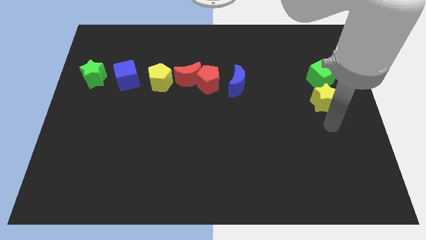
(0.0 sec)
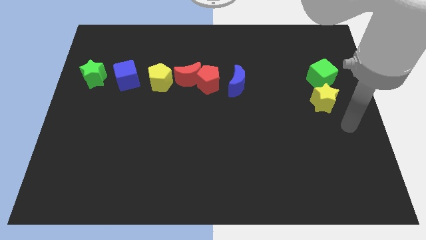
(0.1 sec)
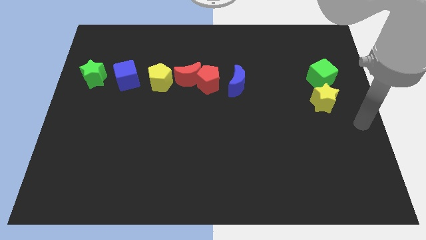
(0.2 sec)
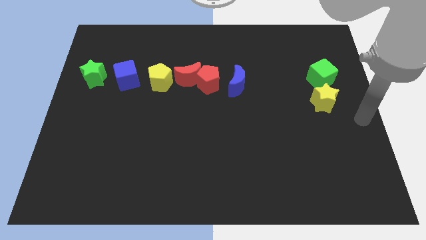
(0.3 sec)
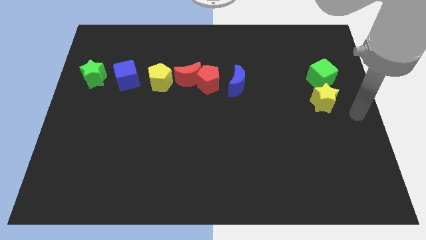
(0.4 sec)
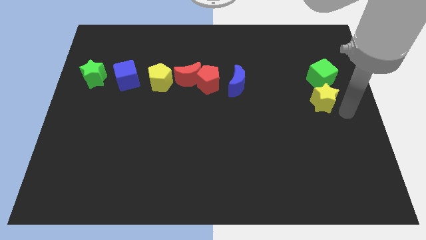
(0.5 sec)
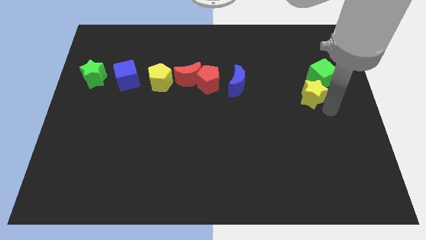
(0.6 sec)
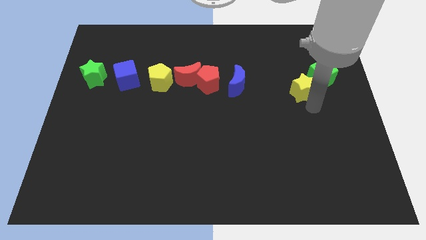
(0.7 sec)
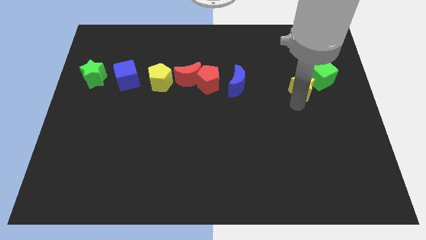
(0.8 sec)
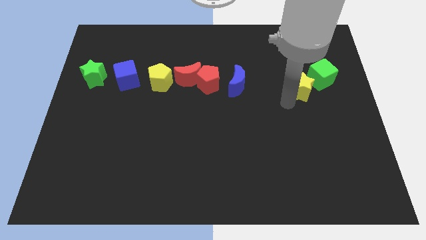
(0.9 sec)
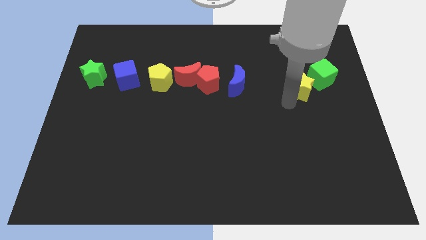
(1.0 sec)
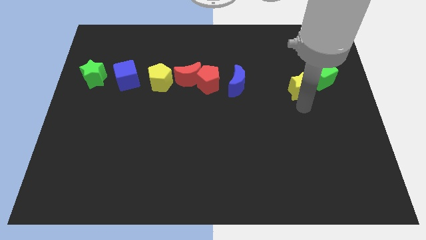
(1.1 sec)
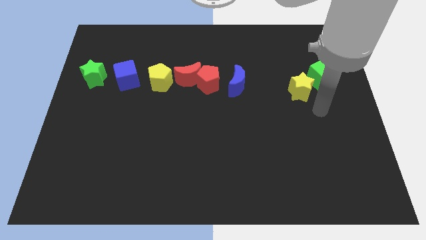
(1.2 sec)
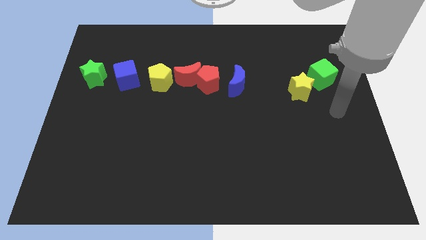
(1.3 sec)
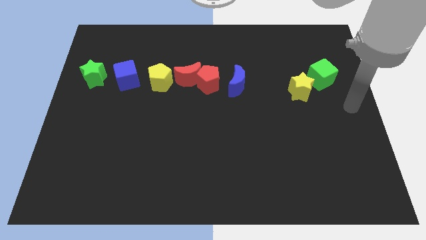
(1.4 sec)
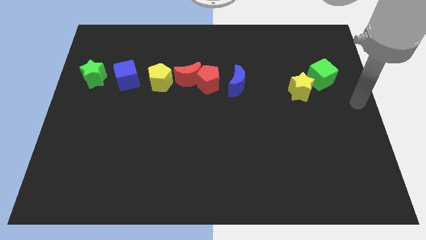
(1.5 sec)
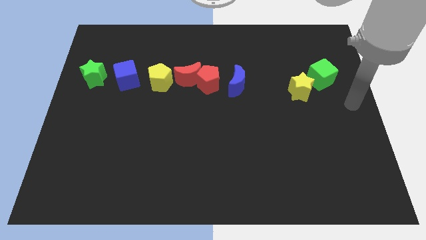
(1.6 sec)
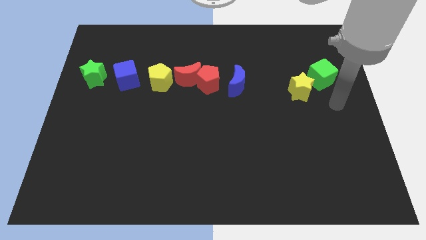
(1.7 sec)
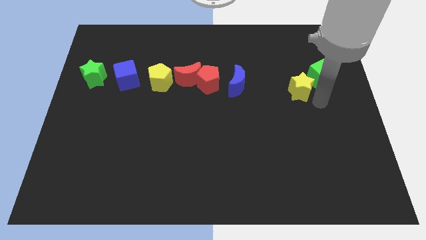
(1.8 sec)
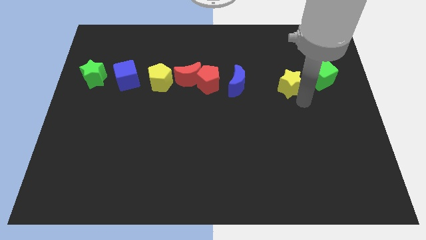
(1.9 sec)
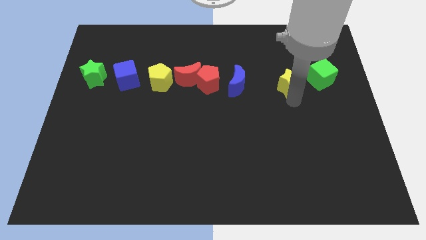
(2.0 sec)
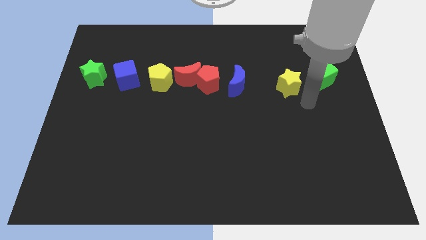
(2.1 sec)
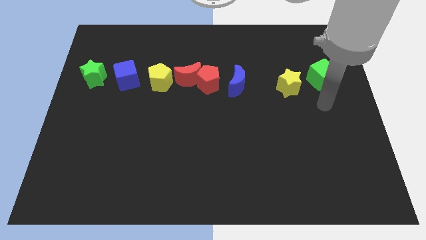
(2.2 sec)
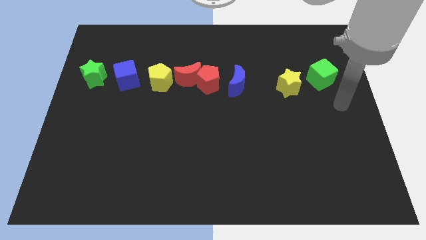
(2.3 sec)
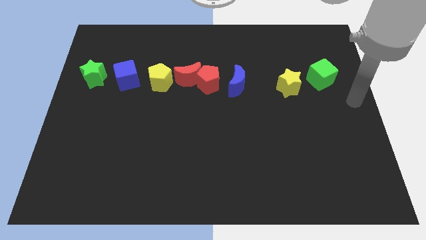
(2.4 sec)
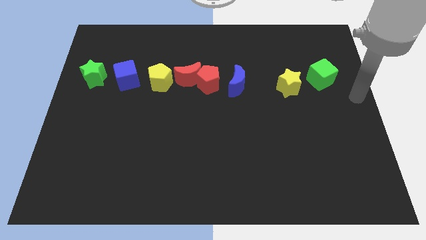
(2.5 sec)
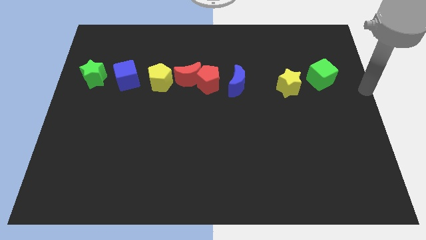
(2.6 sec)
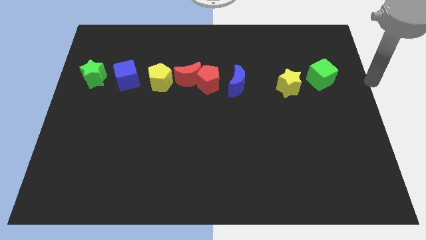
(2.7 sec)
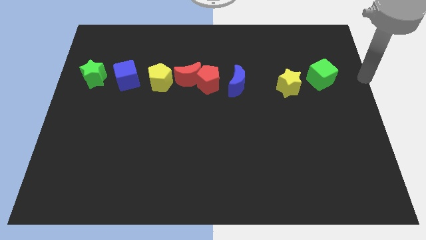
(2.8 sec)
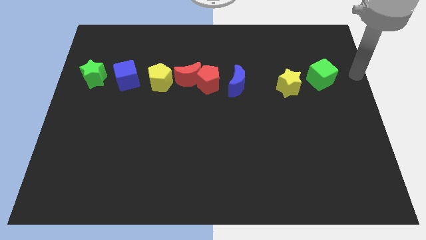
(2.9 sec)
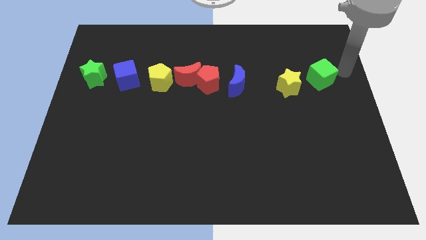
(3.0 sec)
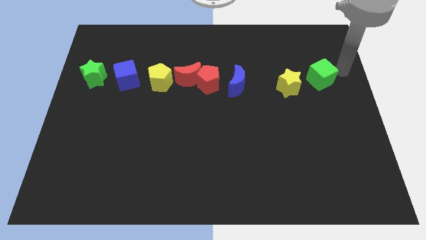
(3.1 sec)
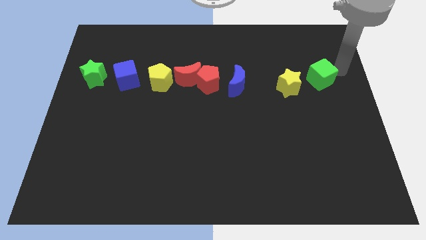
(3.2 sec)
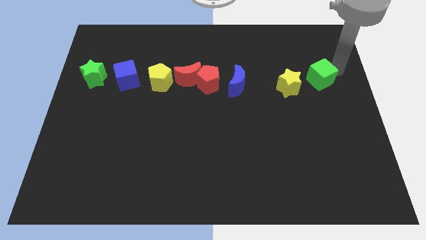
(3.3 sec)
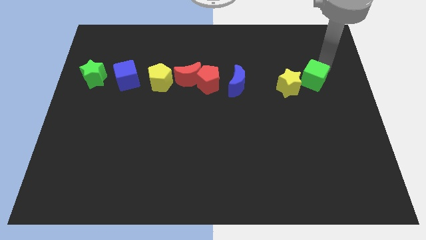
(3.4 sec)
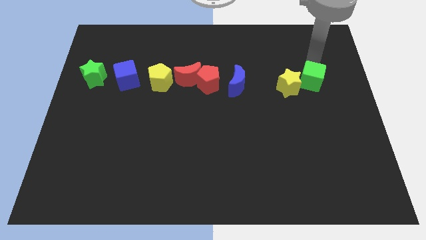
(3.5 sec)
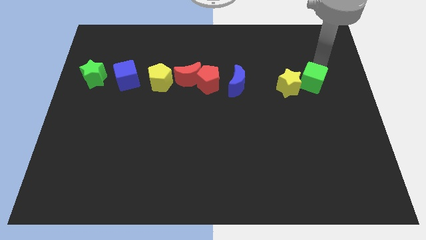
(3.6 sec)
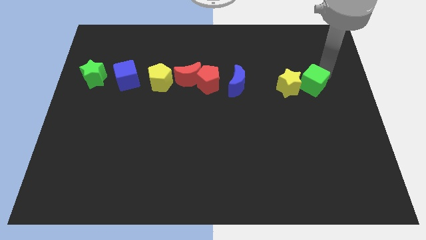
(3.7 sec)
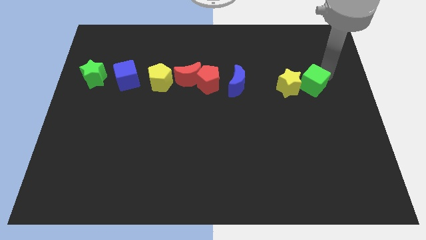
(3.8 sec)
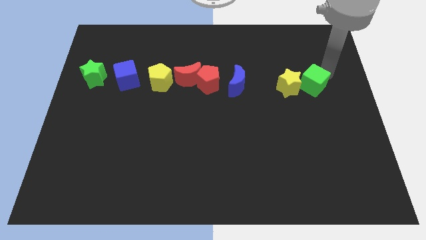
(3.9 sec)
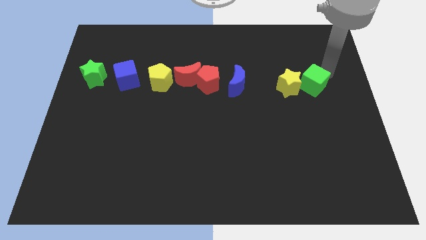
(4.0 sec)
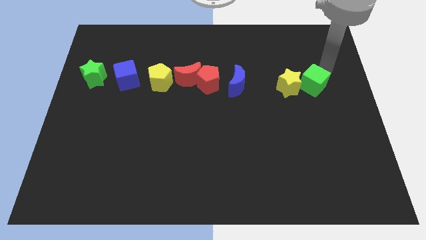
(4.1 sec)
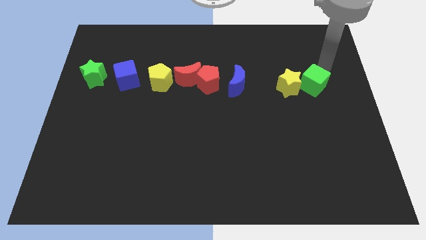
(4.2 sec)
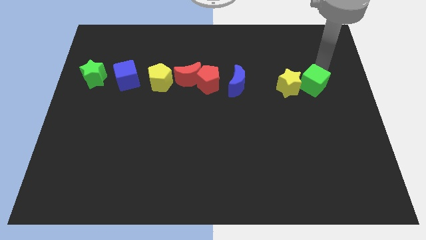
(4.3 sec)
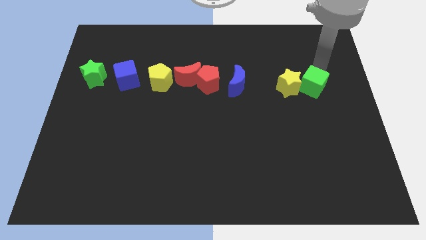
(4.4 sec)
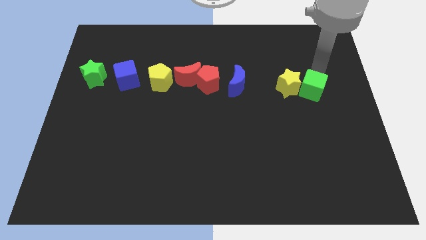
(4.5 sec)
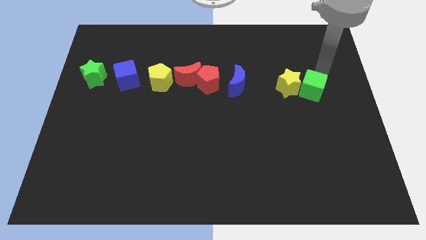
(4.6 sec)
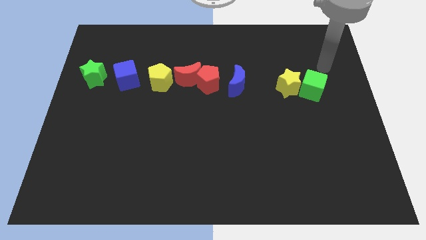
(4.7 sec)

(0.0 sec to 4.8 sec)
align yellow star with green cube

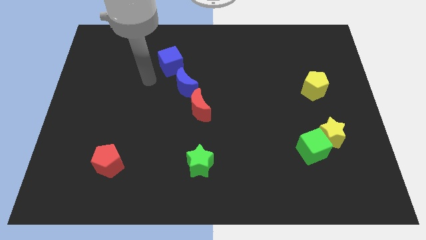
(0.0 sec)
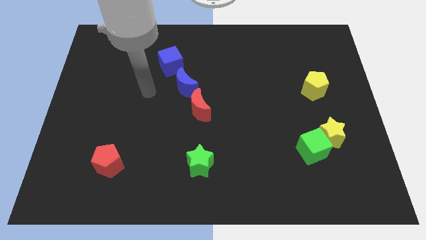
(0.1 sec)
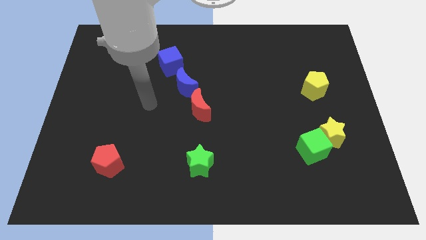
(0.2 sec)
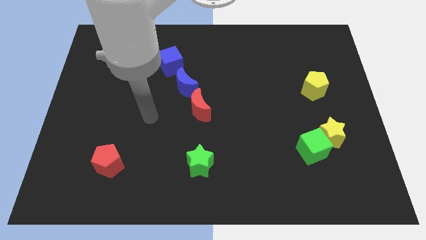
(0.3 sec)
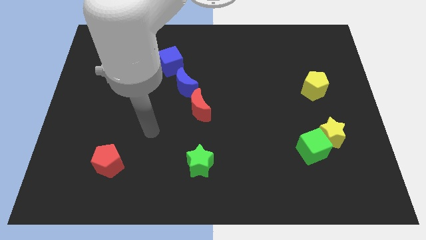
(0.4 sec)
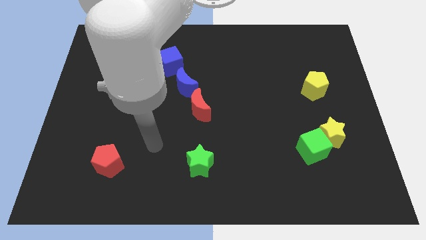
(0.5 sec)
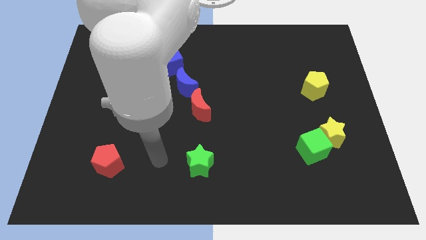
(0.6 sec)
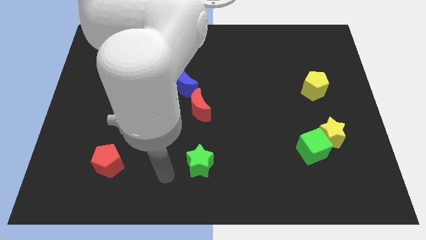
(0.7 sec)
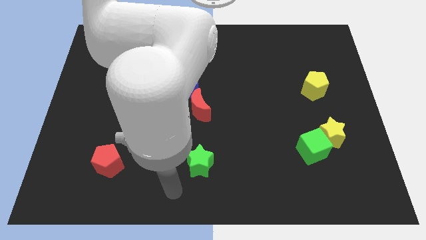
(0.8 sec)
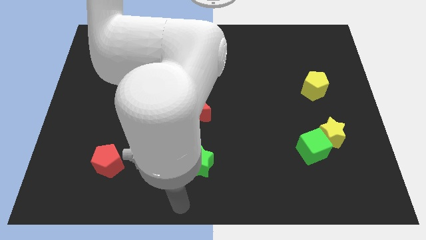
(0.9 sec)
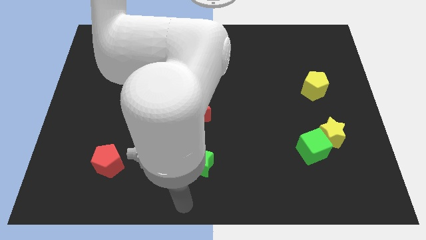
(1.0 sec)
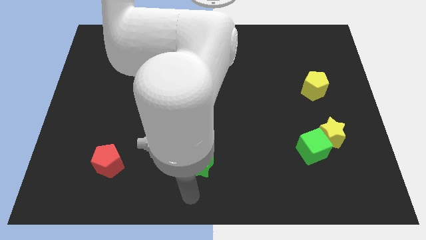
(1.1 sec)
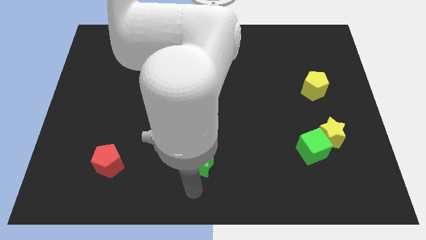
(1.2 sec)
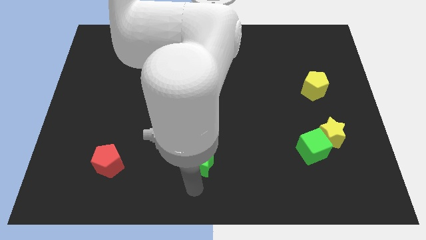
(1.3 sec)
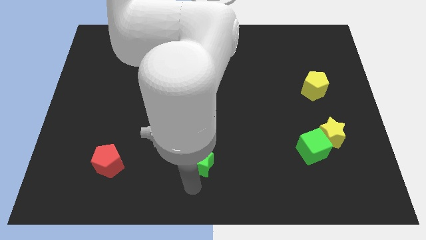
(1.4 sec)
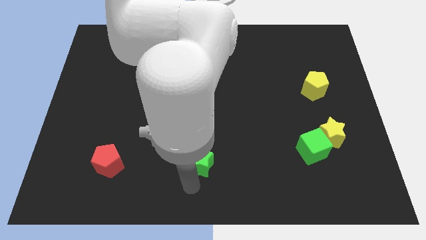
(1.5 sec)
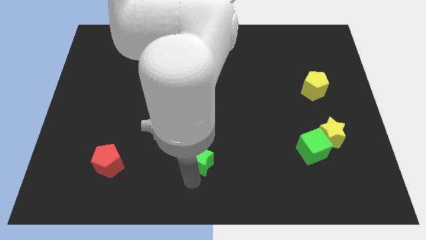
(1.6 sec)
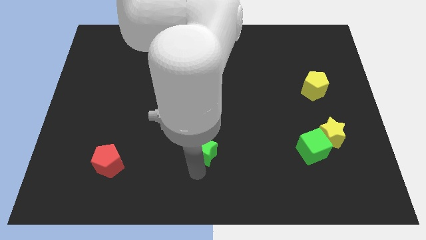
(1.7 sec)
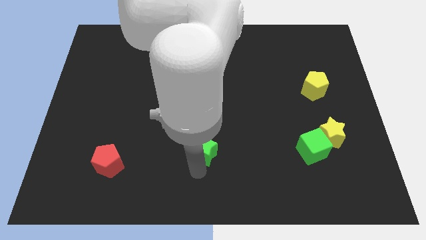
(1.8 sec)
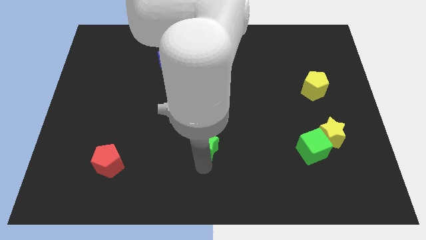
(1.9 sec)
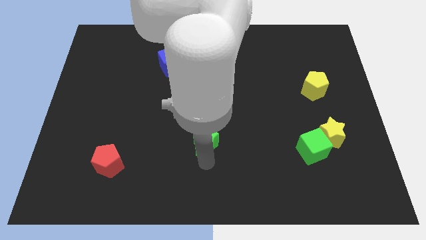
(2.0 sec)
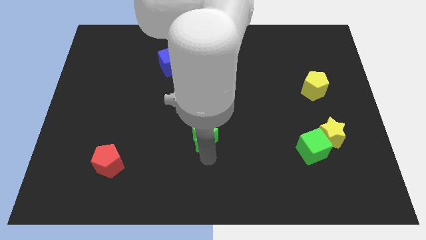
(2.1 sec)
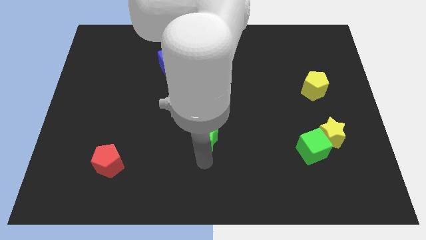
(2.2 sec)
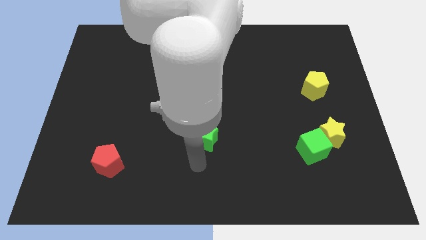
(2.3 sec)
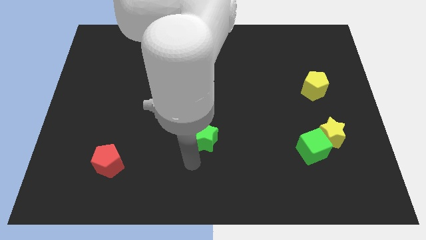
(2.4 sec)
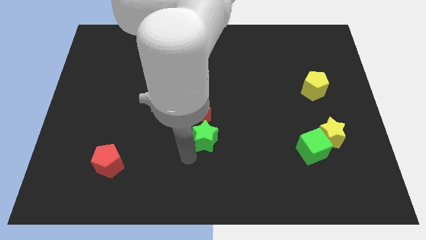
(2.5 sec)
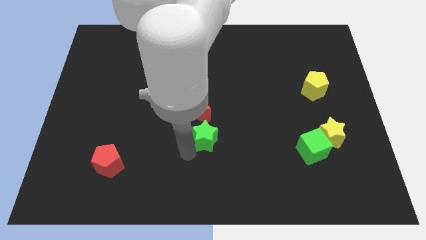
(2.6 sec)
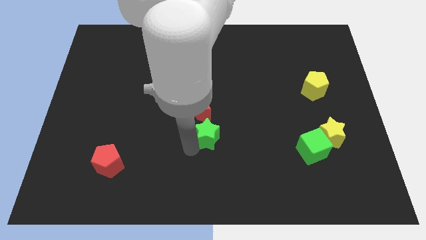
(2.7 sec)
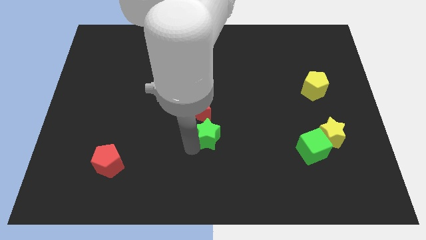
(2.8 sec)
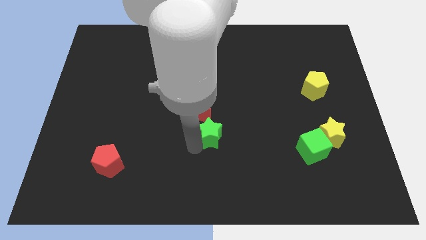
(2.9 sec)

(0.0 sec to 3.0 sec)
move the green star close to the bottom of the red crescent

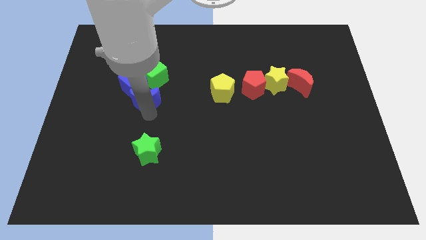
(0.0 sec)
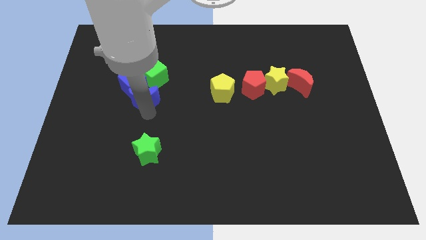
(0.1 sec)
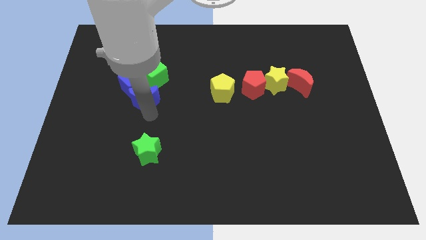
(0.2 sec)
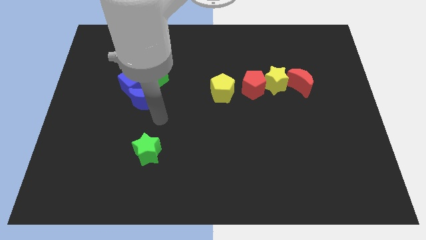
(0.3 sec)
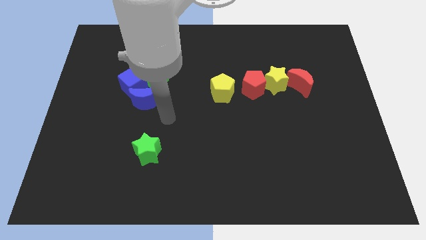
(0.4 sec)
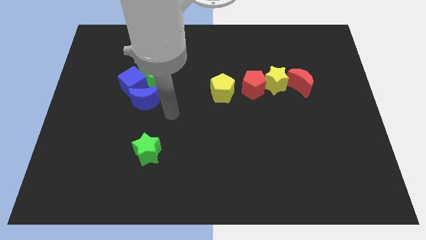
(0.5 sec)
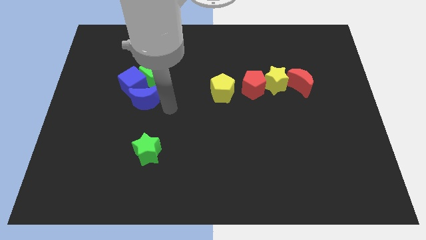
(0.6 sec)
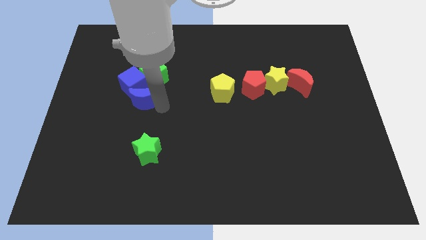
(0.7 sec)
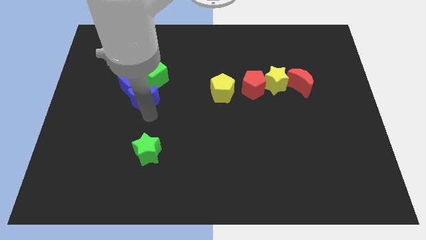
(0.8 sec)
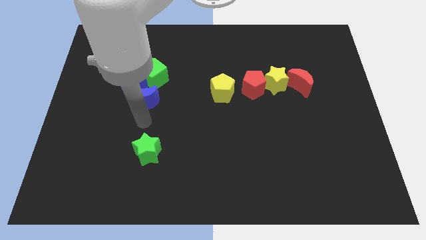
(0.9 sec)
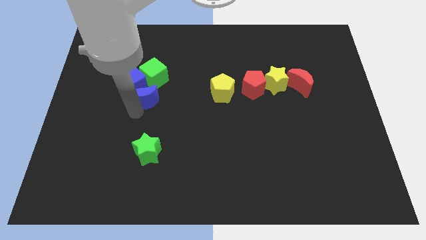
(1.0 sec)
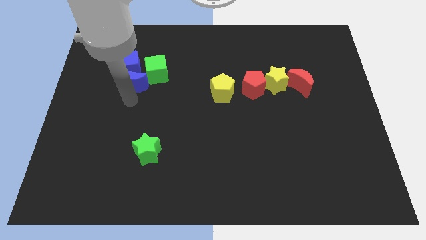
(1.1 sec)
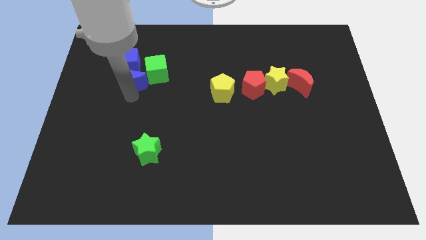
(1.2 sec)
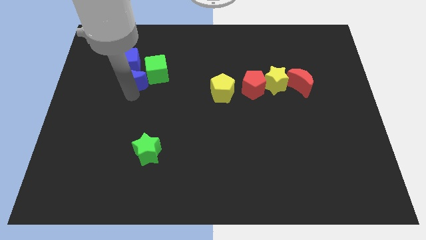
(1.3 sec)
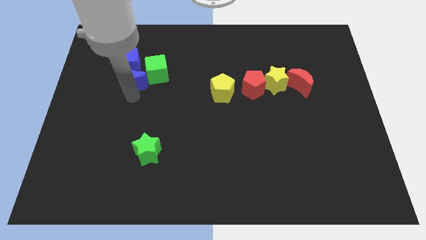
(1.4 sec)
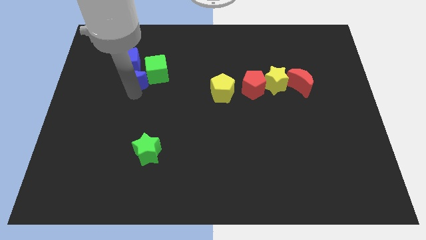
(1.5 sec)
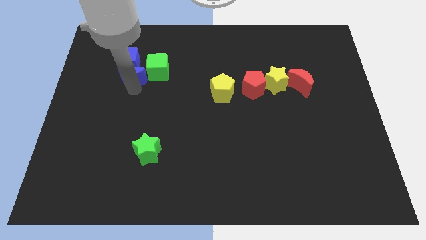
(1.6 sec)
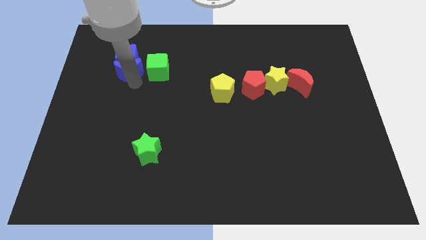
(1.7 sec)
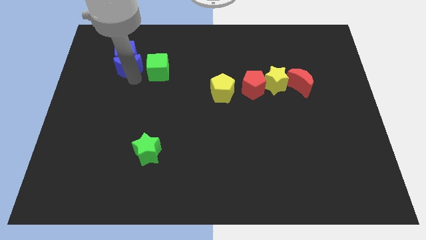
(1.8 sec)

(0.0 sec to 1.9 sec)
push the blue crescent into the blue cube
